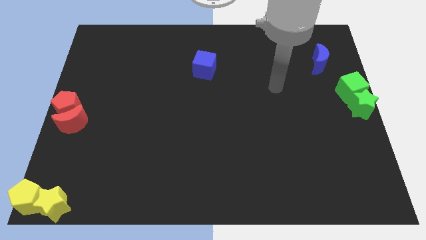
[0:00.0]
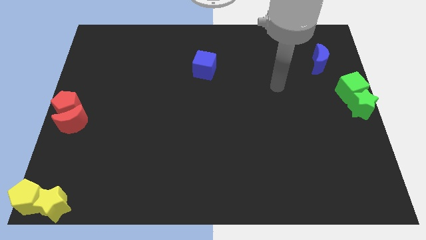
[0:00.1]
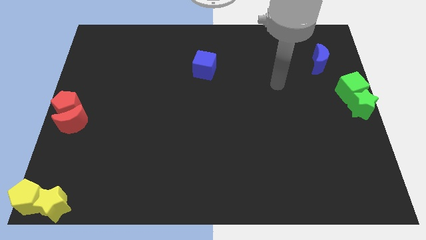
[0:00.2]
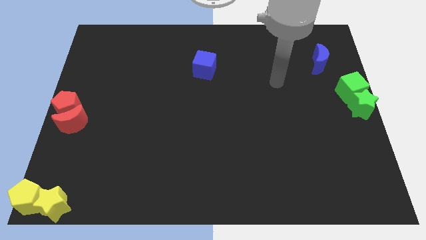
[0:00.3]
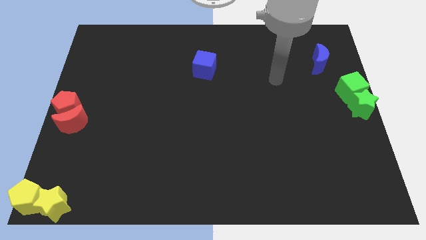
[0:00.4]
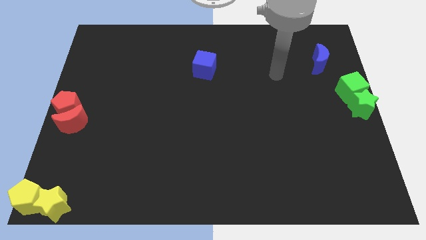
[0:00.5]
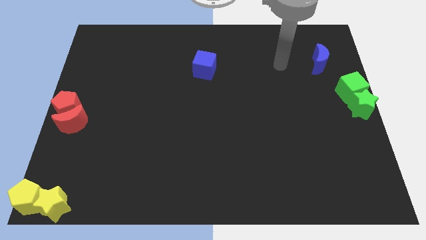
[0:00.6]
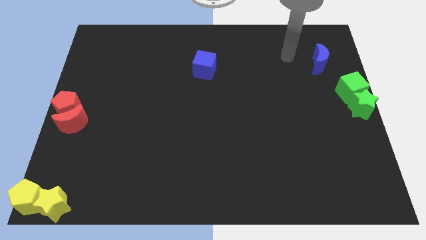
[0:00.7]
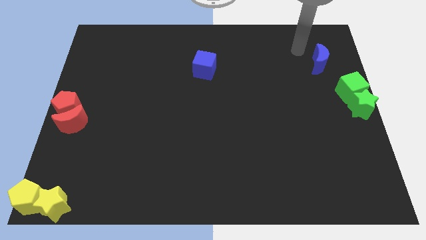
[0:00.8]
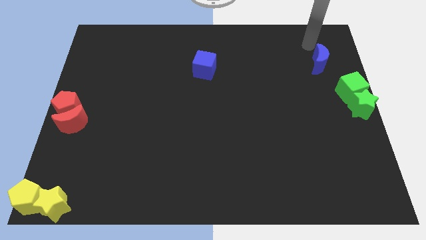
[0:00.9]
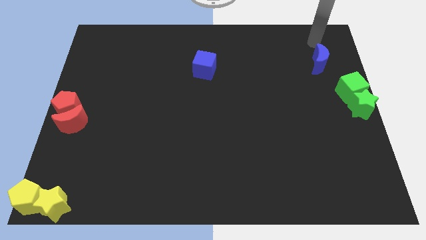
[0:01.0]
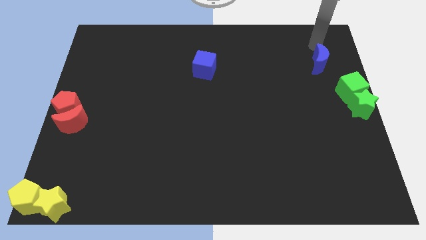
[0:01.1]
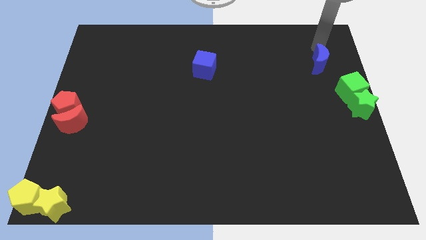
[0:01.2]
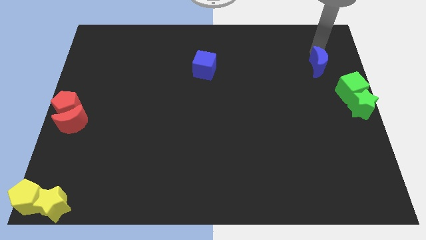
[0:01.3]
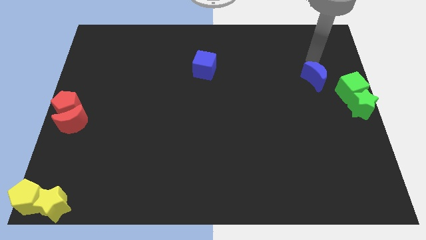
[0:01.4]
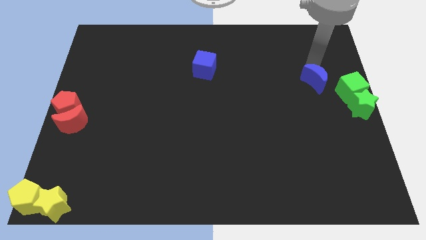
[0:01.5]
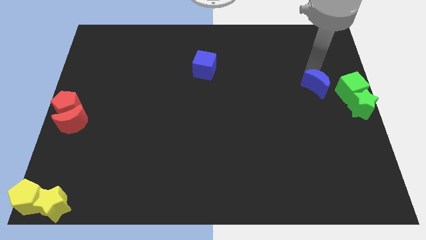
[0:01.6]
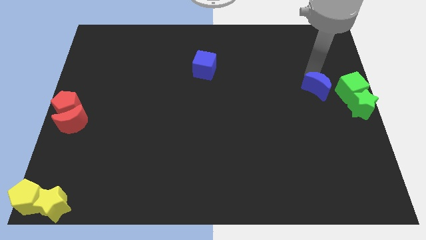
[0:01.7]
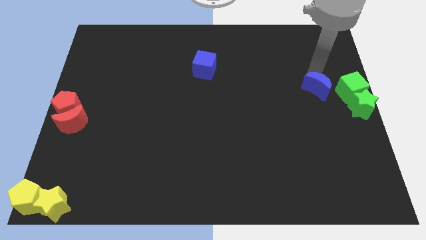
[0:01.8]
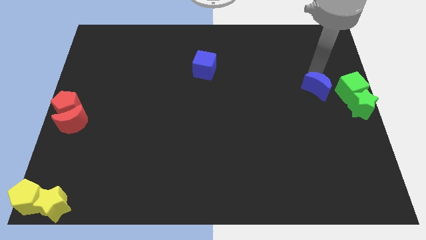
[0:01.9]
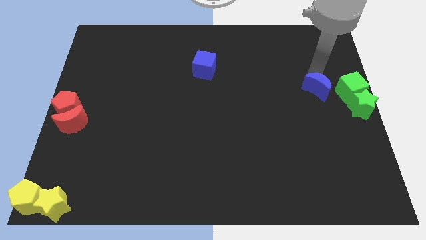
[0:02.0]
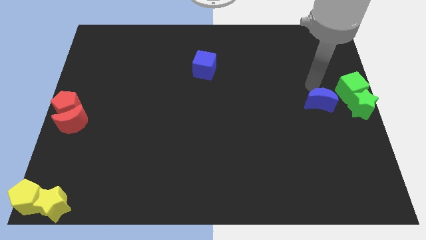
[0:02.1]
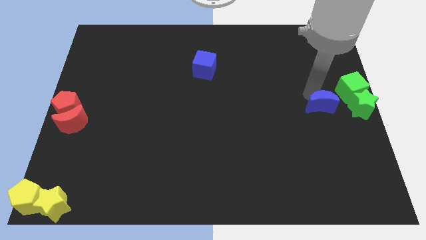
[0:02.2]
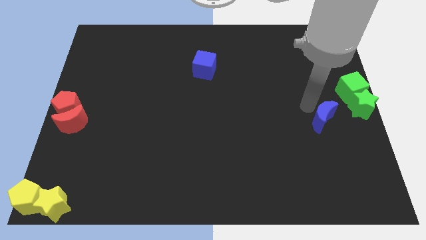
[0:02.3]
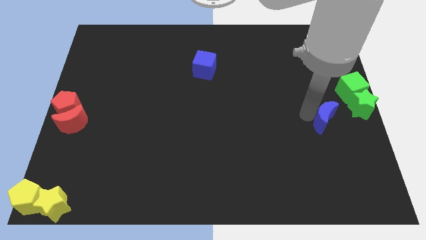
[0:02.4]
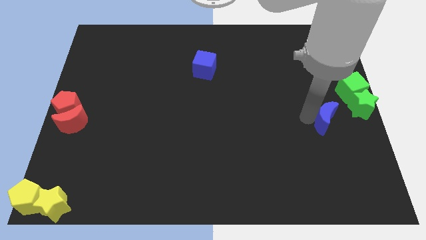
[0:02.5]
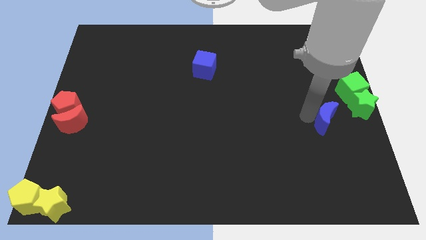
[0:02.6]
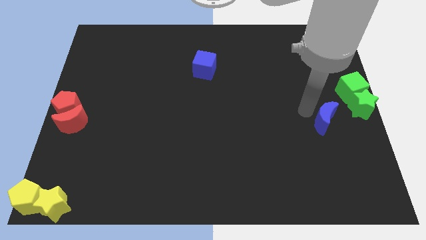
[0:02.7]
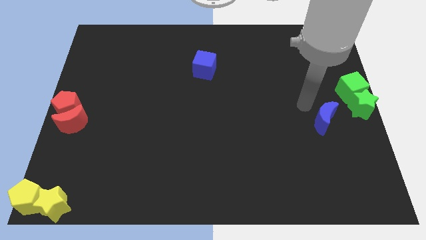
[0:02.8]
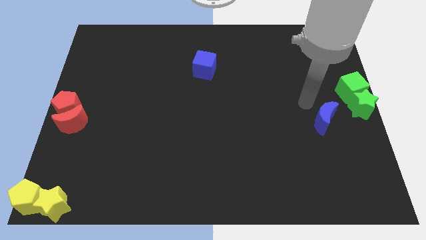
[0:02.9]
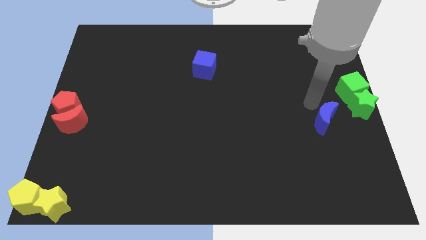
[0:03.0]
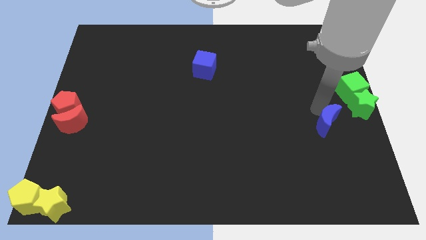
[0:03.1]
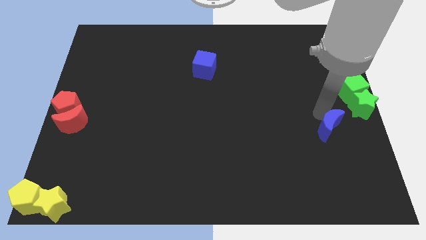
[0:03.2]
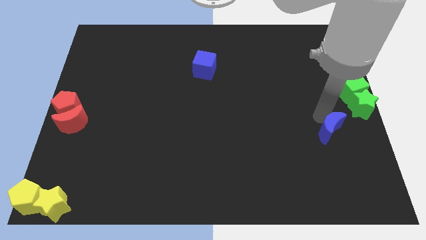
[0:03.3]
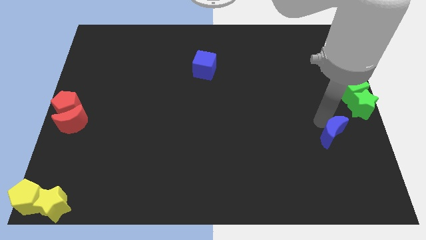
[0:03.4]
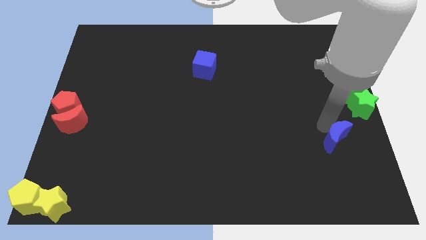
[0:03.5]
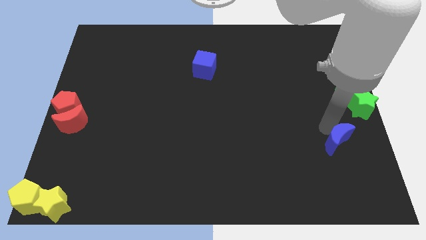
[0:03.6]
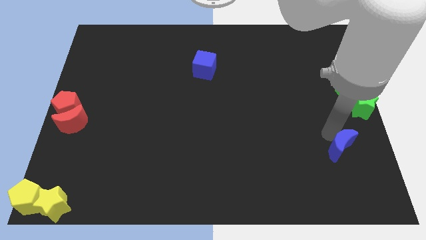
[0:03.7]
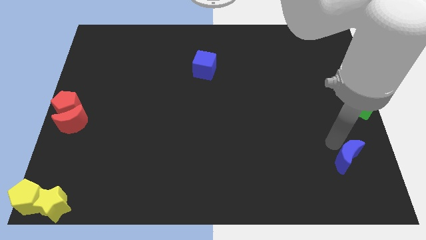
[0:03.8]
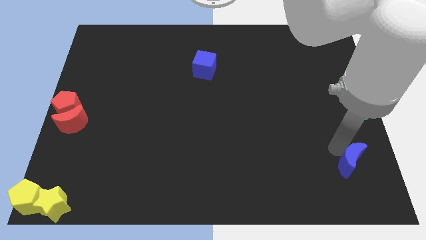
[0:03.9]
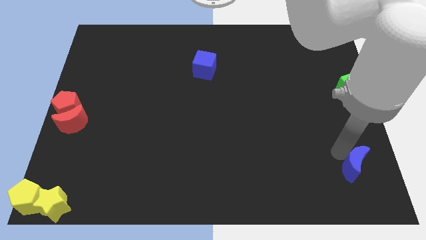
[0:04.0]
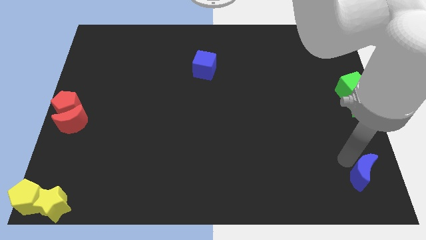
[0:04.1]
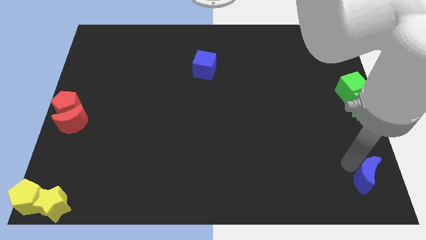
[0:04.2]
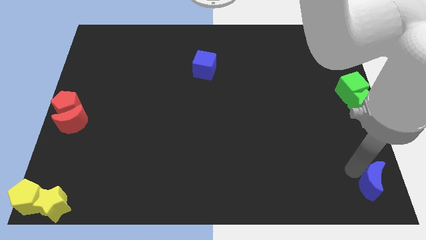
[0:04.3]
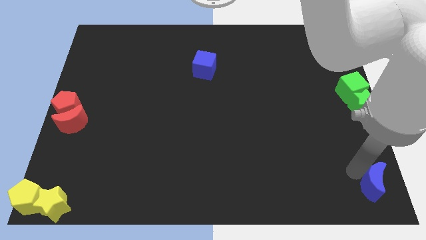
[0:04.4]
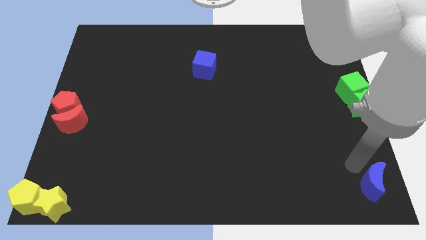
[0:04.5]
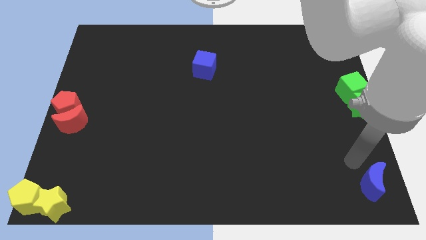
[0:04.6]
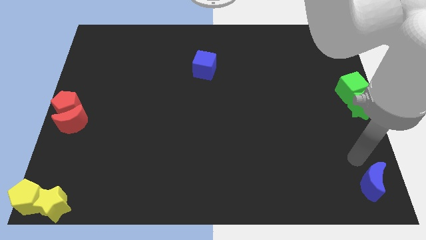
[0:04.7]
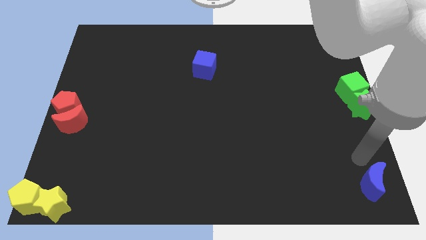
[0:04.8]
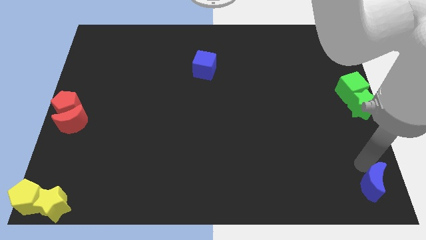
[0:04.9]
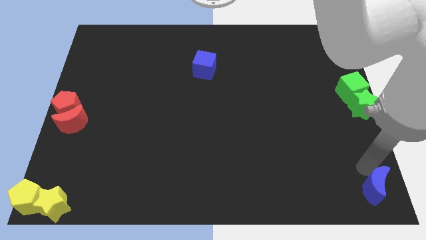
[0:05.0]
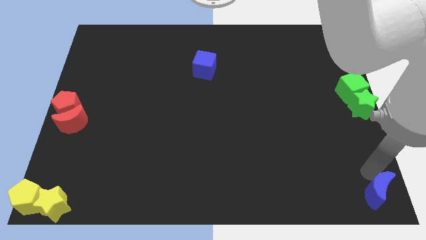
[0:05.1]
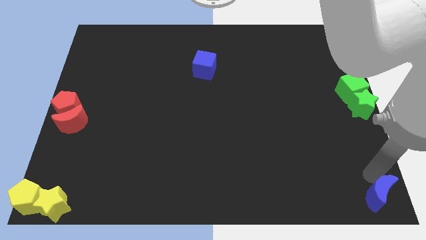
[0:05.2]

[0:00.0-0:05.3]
push the blue crescent towards the bottom left corner of the board

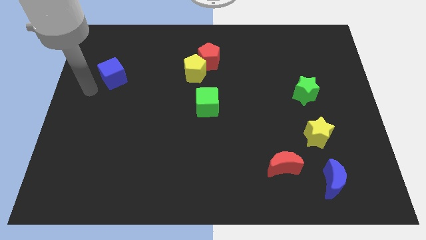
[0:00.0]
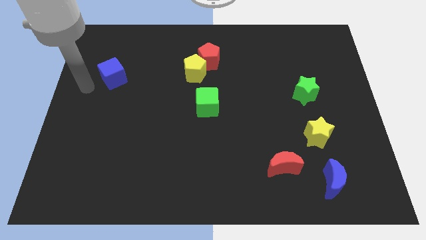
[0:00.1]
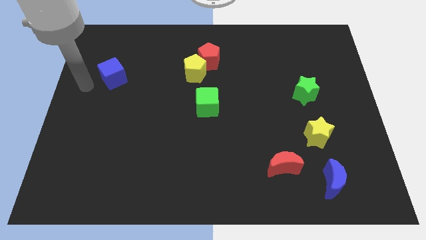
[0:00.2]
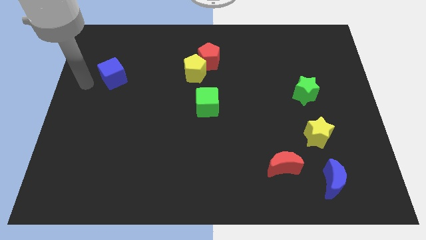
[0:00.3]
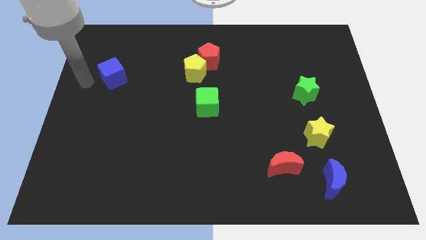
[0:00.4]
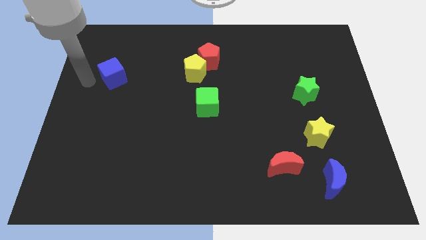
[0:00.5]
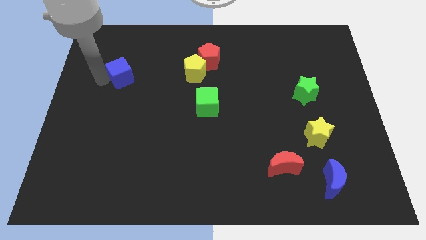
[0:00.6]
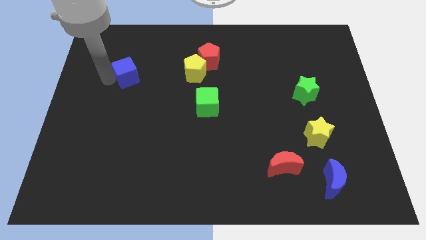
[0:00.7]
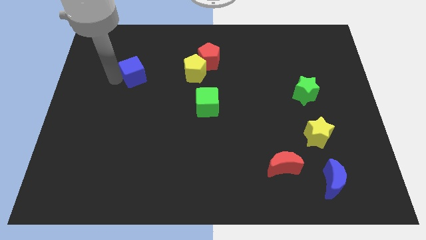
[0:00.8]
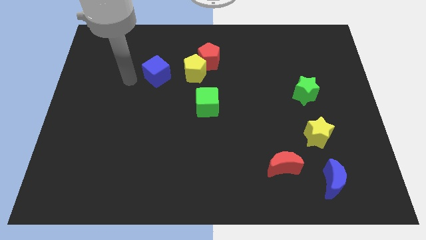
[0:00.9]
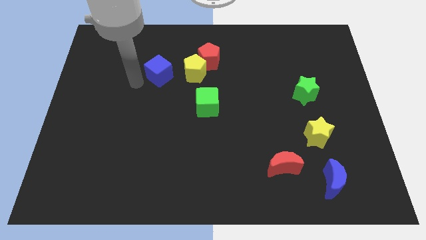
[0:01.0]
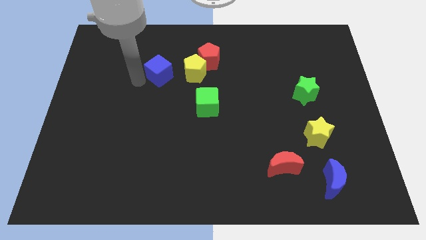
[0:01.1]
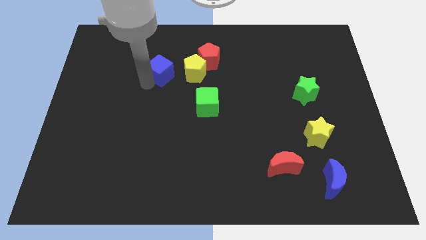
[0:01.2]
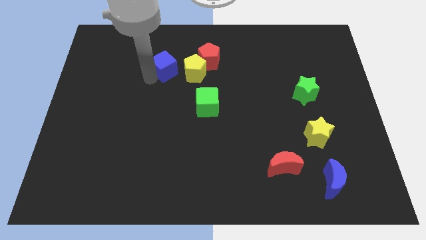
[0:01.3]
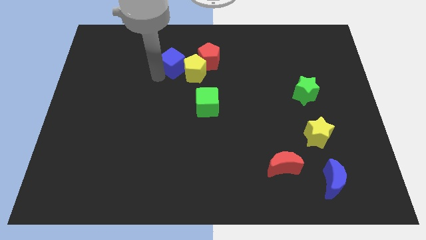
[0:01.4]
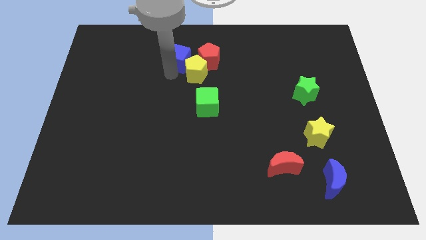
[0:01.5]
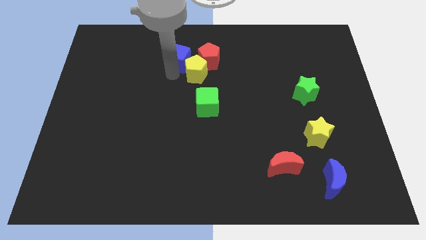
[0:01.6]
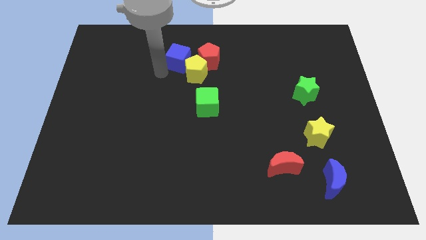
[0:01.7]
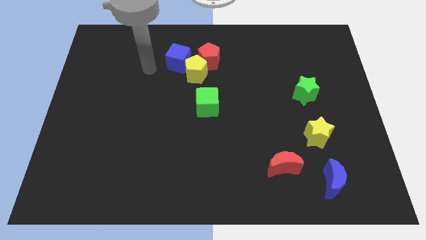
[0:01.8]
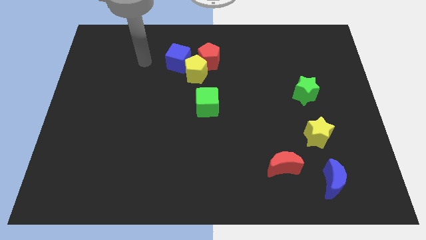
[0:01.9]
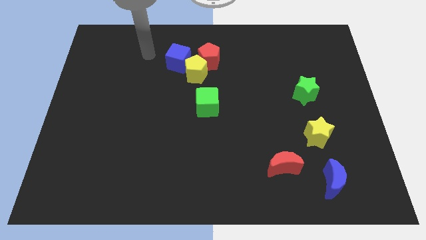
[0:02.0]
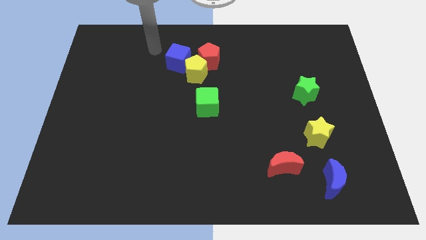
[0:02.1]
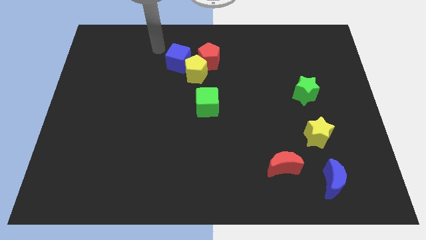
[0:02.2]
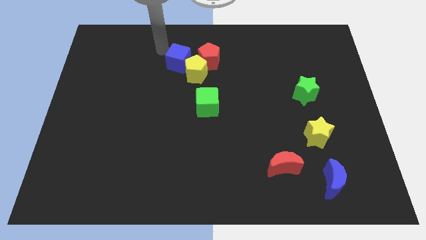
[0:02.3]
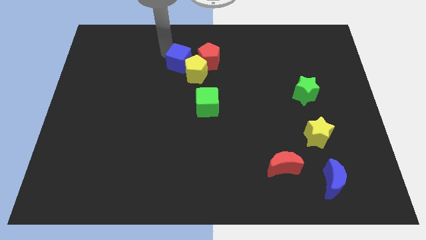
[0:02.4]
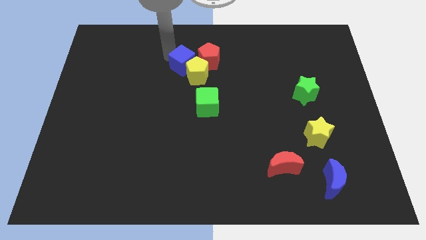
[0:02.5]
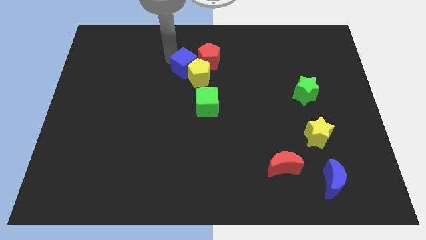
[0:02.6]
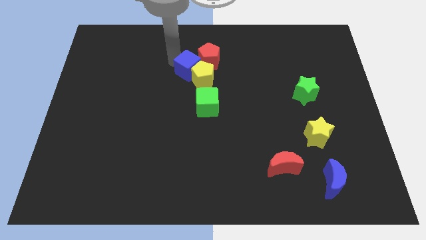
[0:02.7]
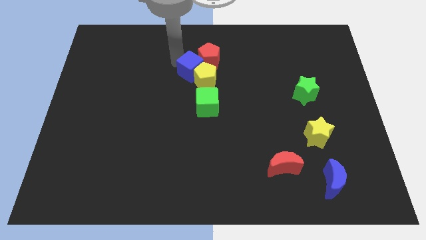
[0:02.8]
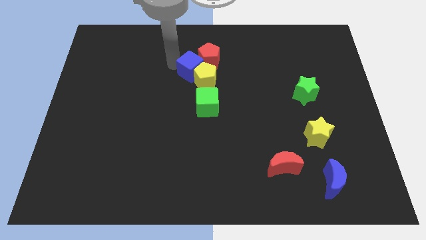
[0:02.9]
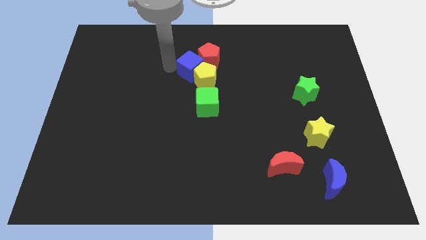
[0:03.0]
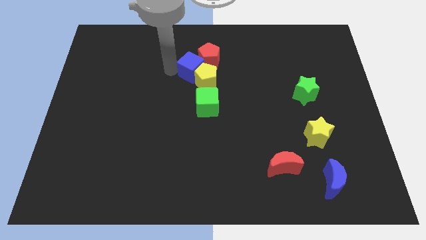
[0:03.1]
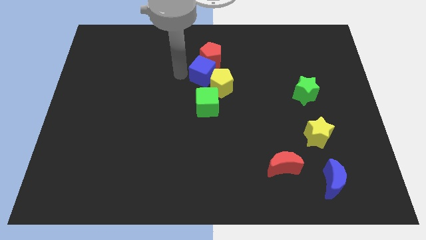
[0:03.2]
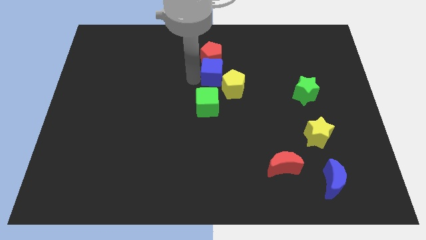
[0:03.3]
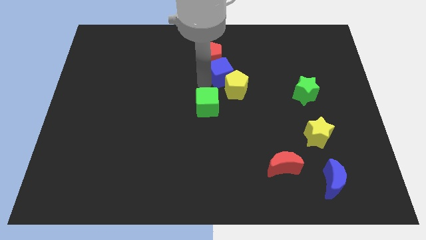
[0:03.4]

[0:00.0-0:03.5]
move the blue cube into the yellow pentagon

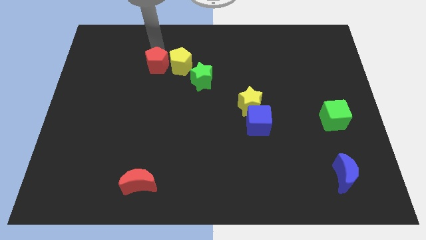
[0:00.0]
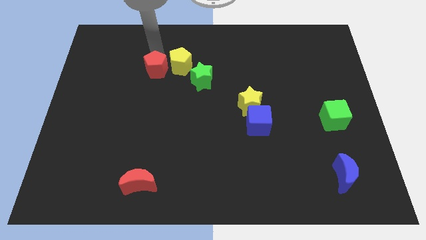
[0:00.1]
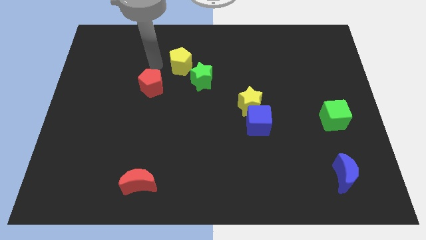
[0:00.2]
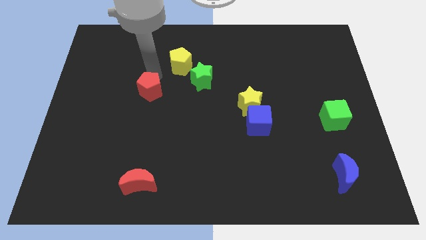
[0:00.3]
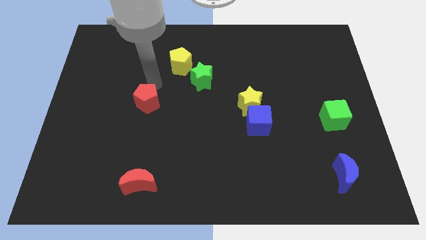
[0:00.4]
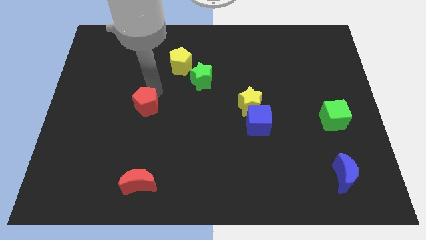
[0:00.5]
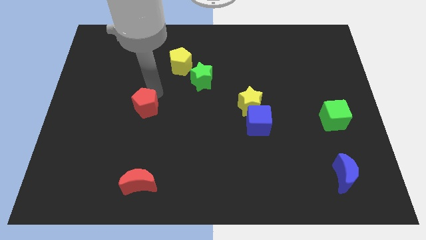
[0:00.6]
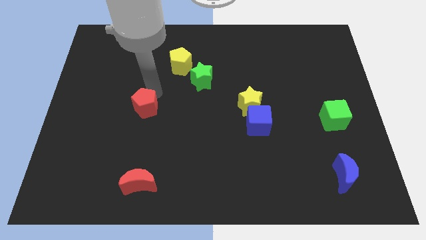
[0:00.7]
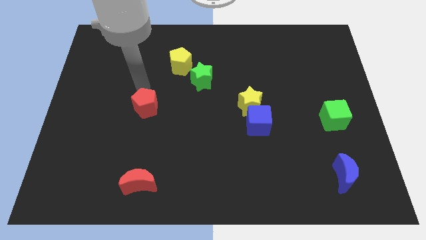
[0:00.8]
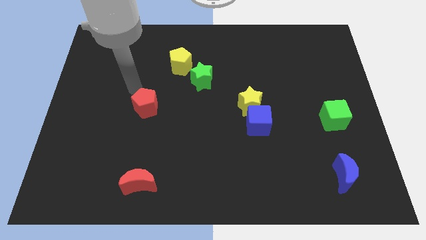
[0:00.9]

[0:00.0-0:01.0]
place the red pentagon to the left of the yellow star
